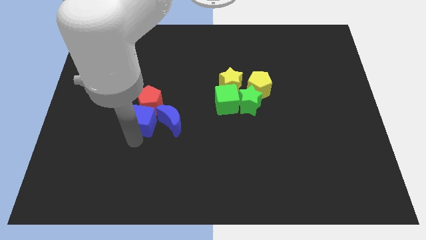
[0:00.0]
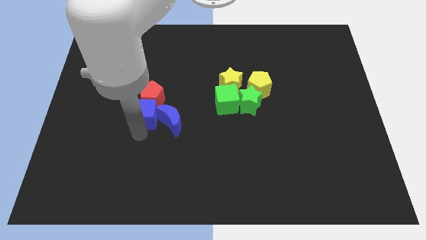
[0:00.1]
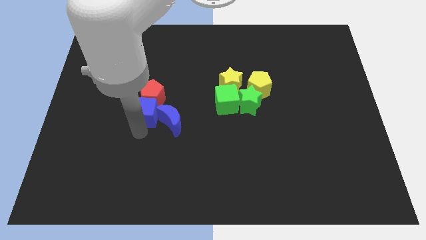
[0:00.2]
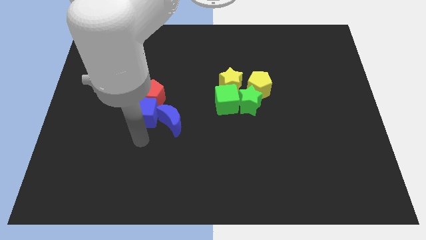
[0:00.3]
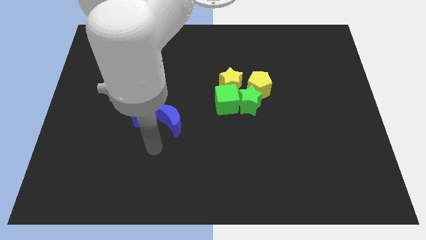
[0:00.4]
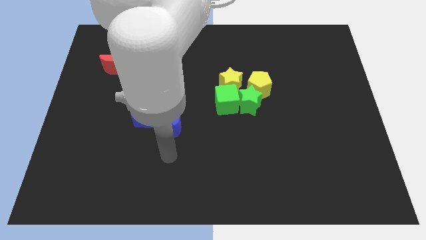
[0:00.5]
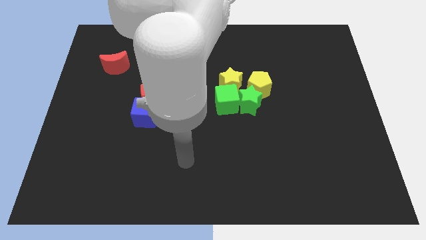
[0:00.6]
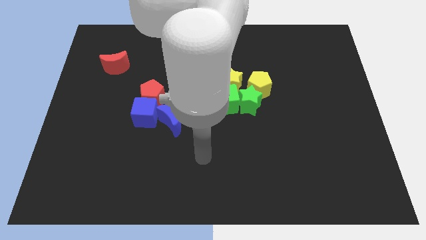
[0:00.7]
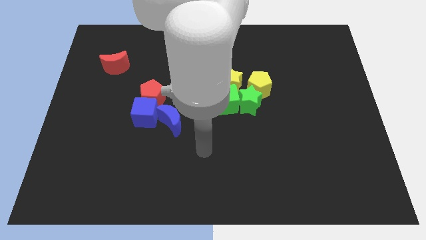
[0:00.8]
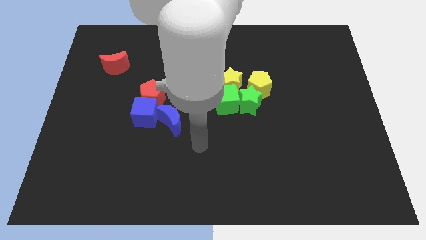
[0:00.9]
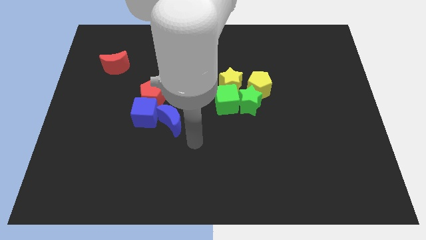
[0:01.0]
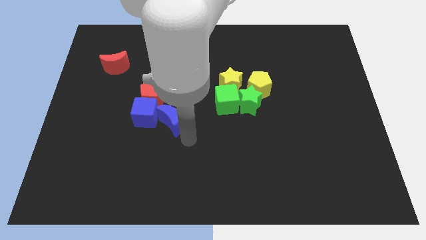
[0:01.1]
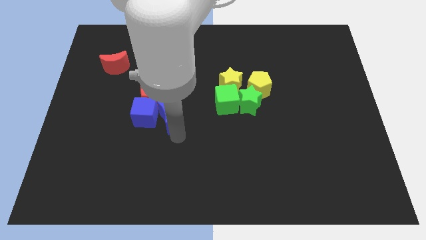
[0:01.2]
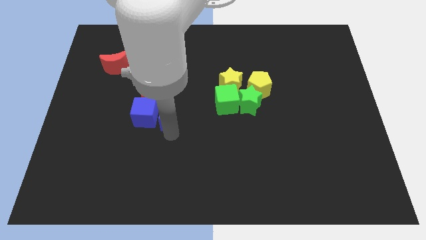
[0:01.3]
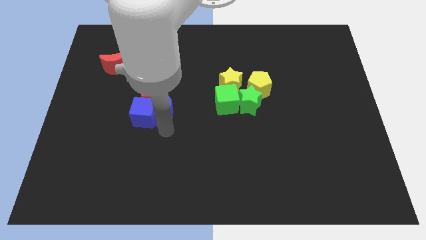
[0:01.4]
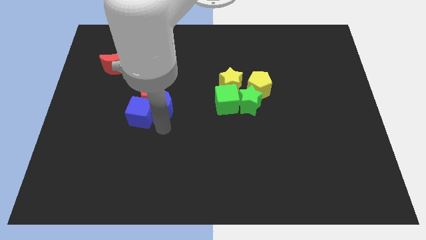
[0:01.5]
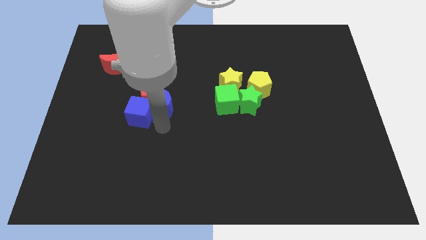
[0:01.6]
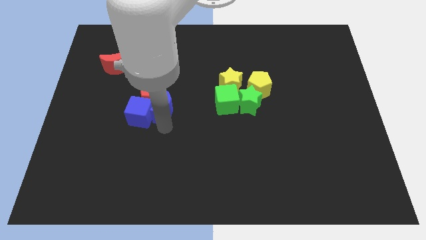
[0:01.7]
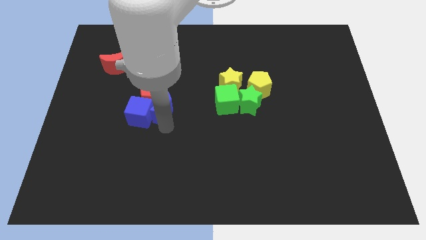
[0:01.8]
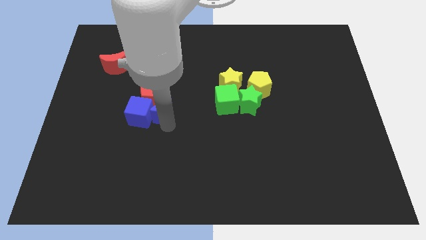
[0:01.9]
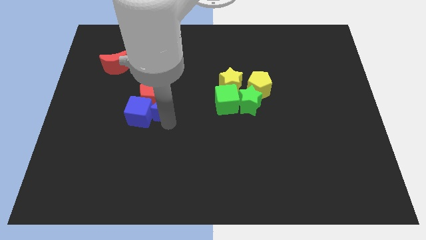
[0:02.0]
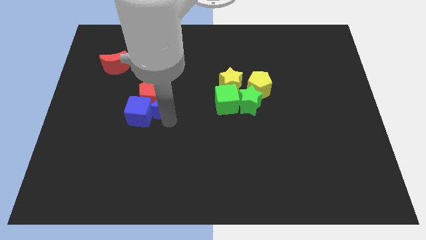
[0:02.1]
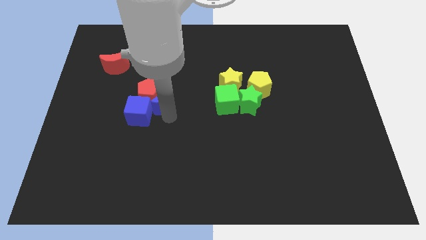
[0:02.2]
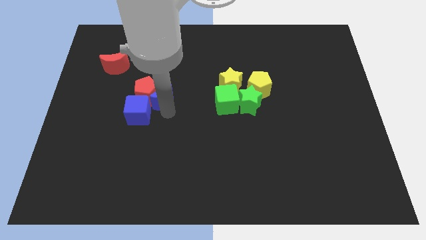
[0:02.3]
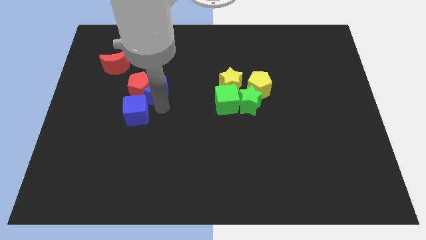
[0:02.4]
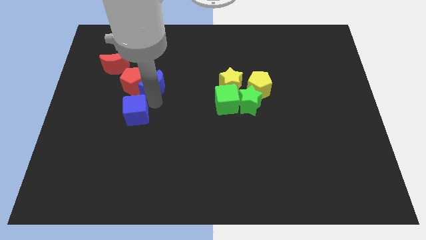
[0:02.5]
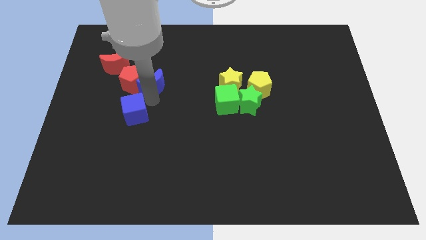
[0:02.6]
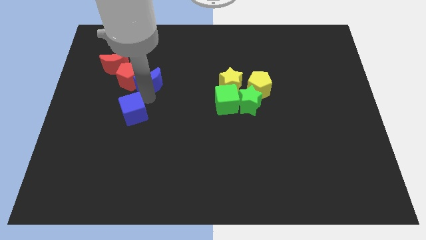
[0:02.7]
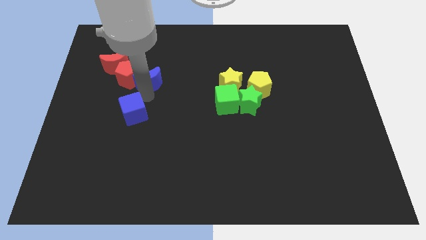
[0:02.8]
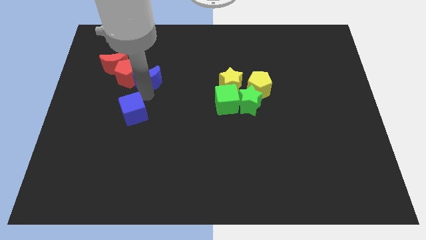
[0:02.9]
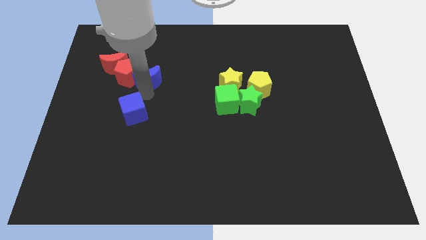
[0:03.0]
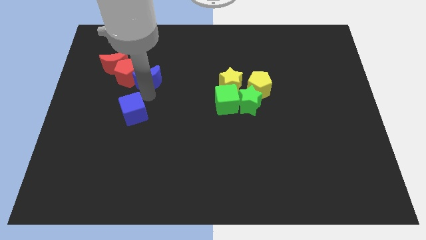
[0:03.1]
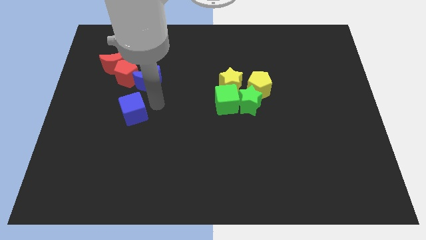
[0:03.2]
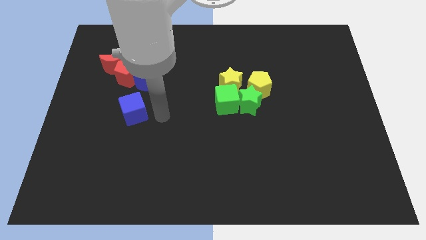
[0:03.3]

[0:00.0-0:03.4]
push the blue cube blue crescent and red pentagon towards the red crescent

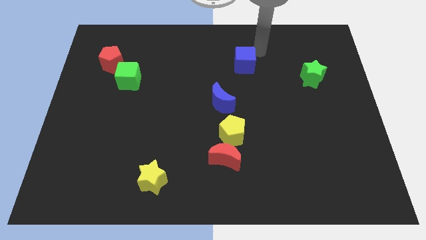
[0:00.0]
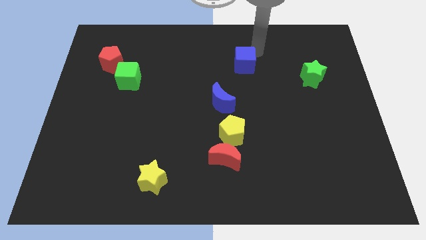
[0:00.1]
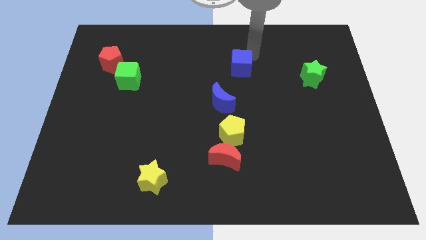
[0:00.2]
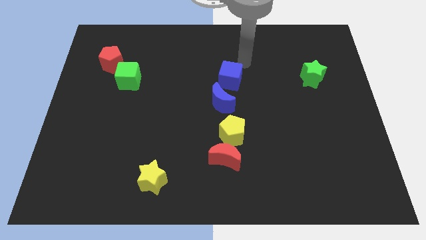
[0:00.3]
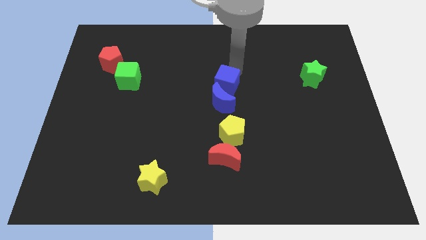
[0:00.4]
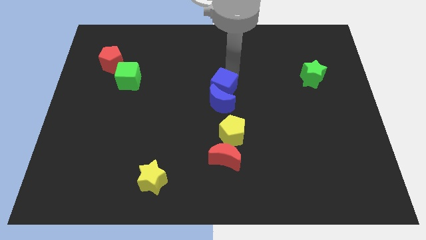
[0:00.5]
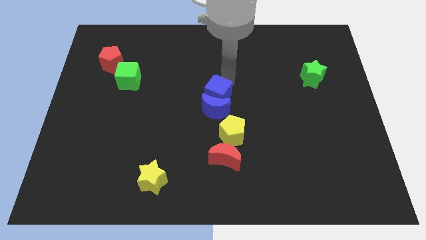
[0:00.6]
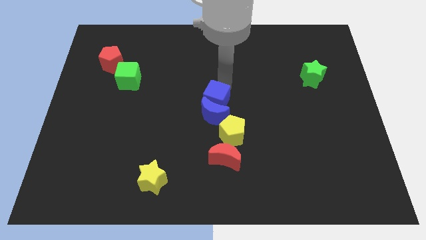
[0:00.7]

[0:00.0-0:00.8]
push the blue cube above the blue crescent

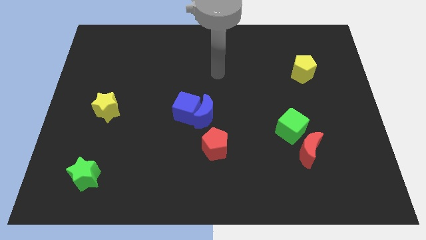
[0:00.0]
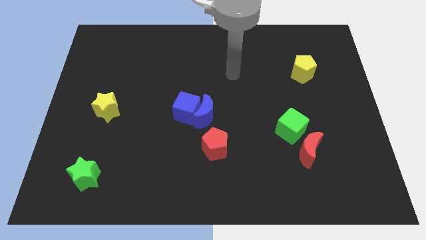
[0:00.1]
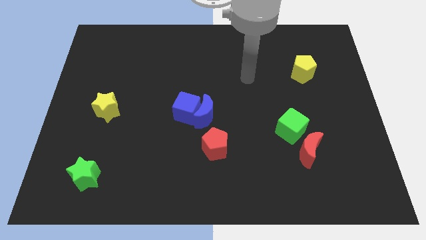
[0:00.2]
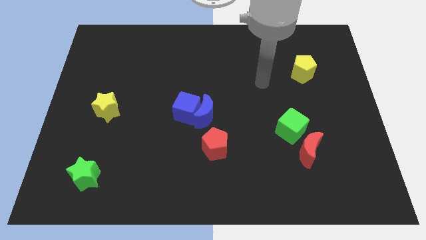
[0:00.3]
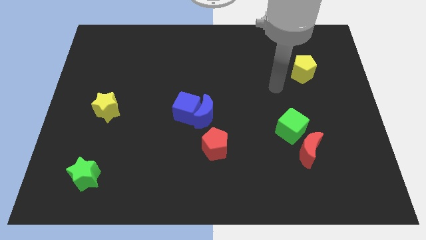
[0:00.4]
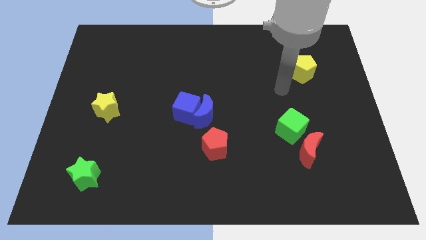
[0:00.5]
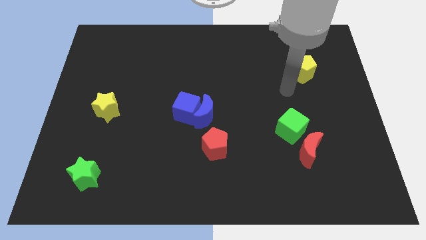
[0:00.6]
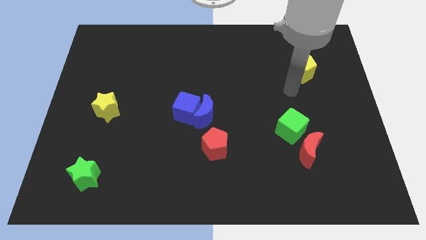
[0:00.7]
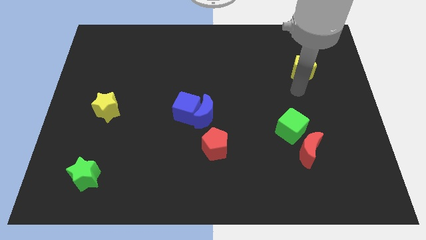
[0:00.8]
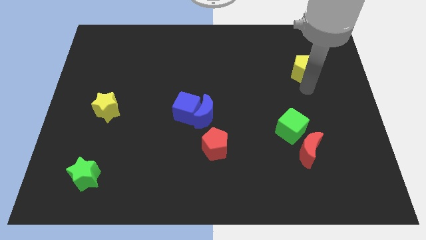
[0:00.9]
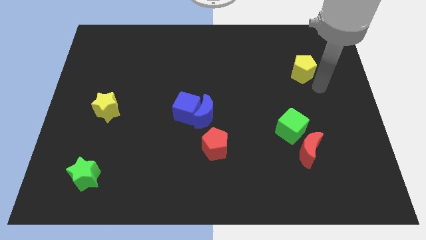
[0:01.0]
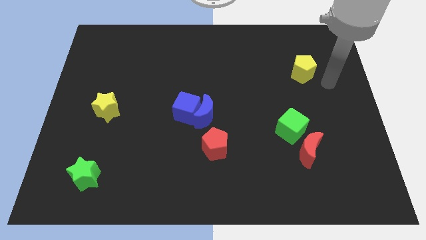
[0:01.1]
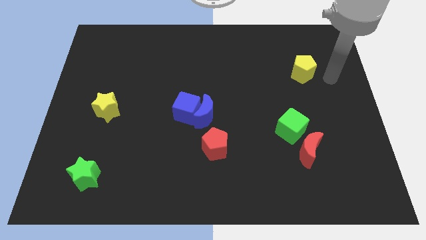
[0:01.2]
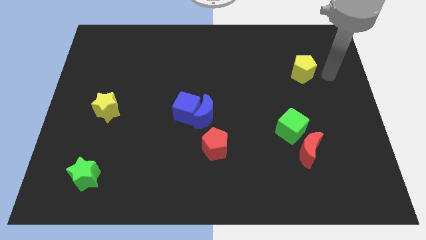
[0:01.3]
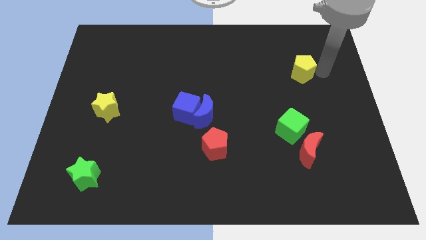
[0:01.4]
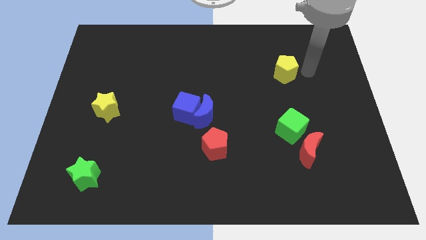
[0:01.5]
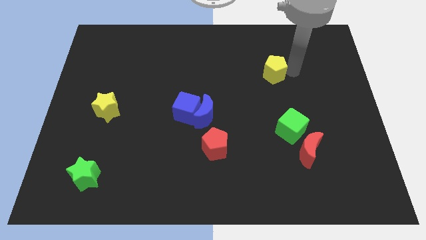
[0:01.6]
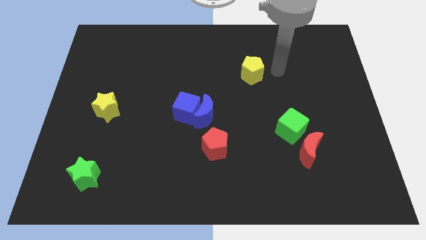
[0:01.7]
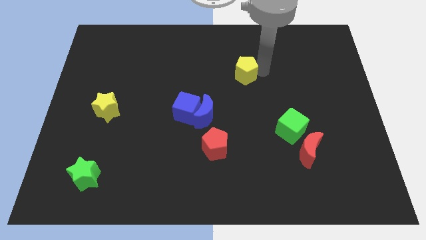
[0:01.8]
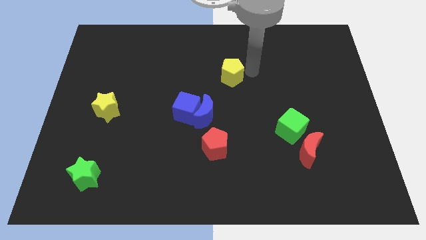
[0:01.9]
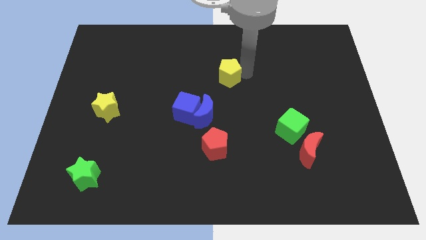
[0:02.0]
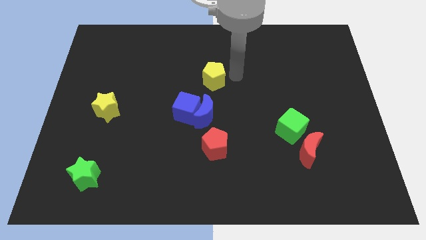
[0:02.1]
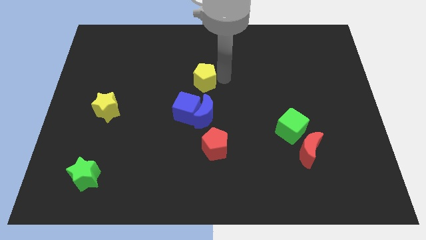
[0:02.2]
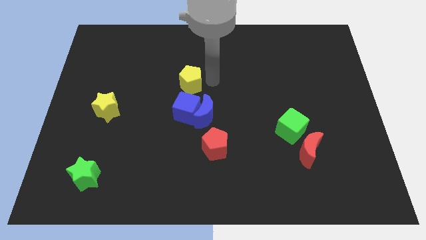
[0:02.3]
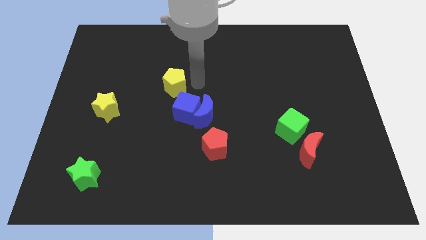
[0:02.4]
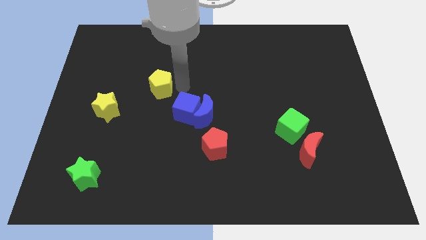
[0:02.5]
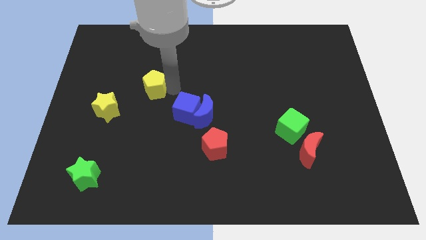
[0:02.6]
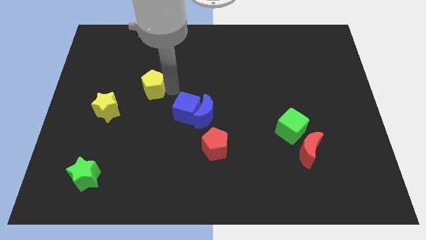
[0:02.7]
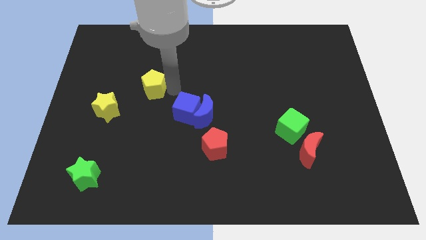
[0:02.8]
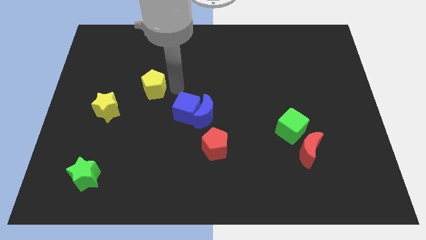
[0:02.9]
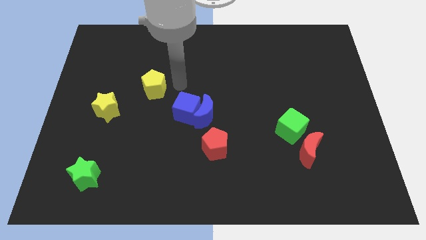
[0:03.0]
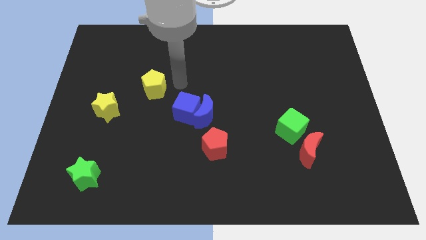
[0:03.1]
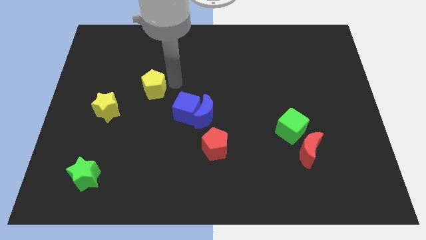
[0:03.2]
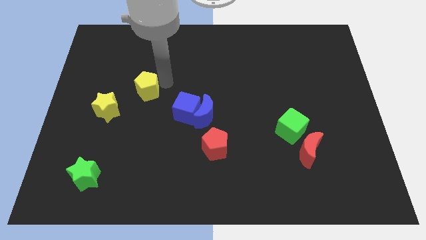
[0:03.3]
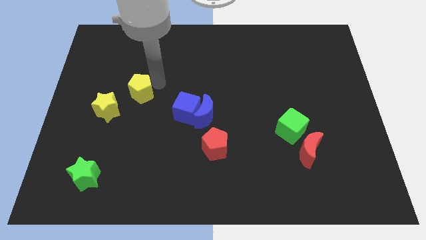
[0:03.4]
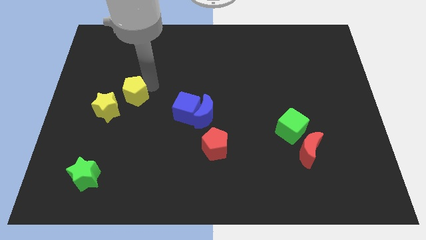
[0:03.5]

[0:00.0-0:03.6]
move the yellow pentagon diagonally above the yellow star

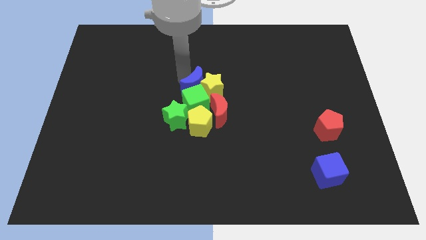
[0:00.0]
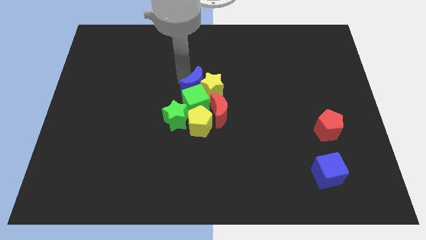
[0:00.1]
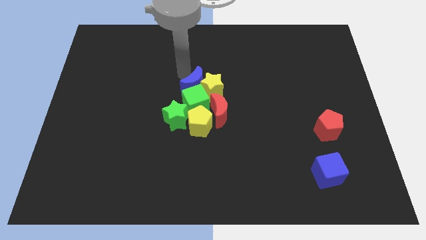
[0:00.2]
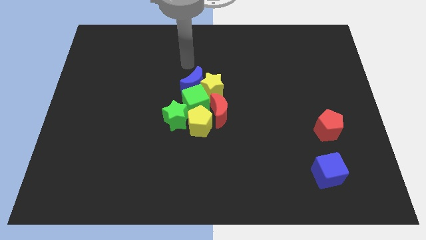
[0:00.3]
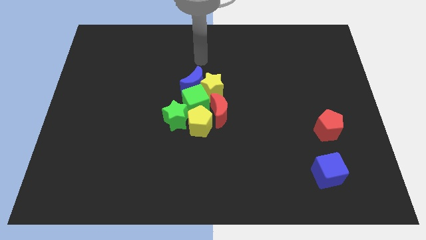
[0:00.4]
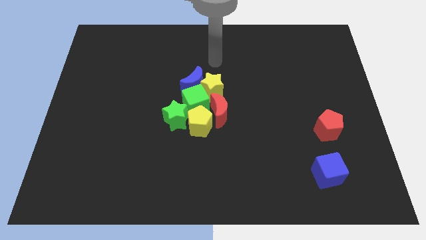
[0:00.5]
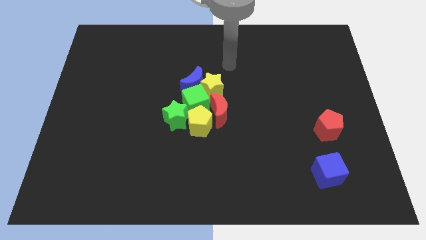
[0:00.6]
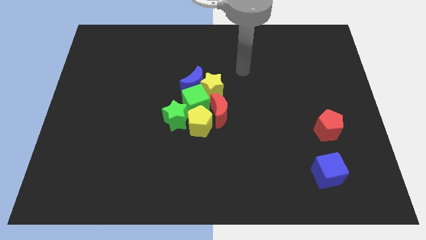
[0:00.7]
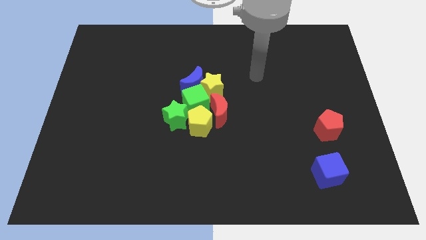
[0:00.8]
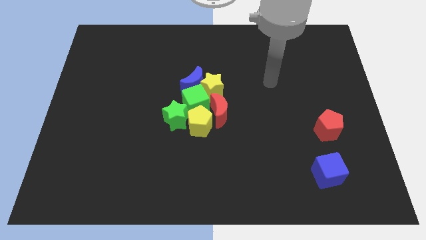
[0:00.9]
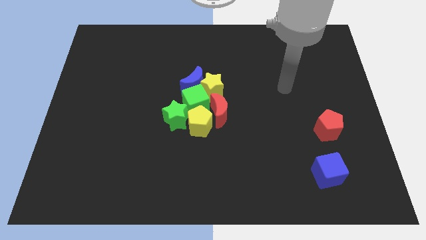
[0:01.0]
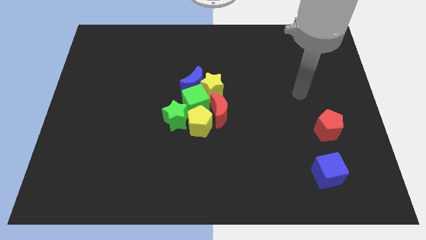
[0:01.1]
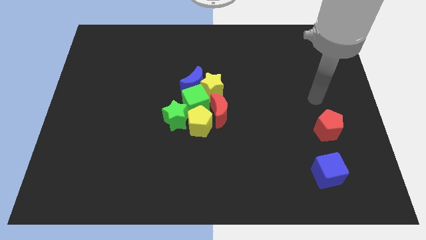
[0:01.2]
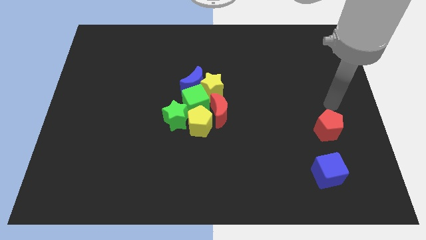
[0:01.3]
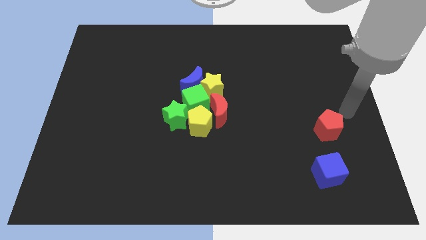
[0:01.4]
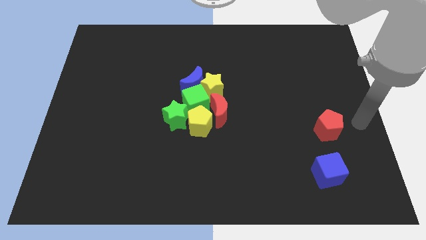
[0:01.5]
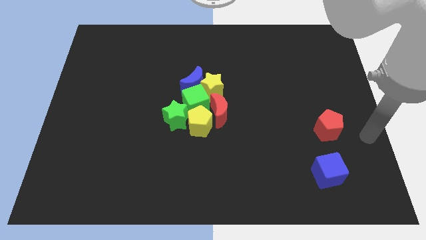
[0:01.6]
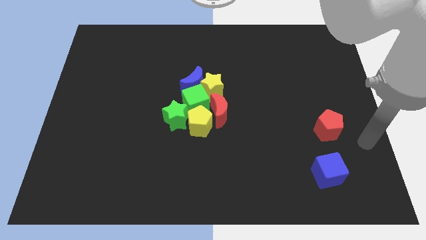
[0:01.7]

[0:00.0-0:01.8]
move your arm away from the blue moon
